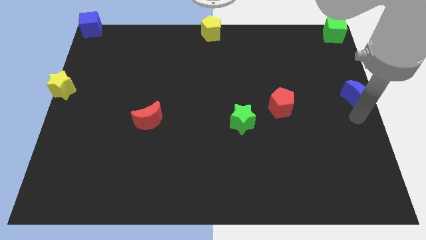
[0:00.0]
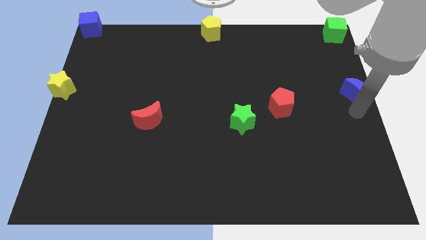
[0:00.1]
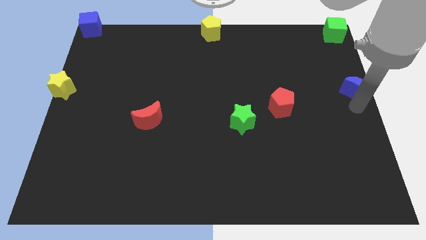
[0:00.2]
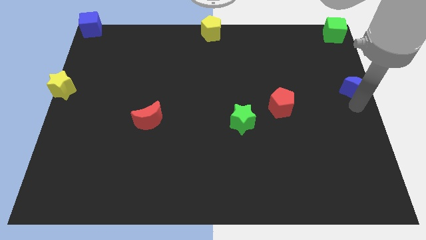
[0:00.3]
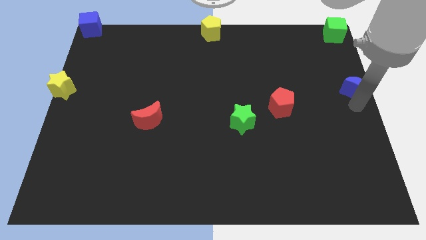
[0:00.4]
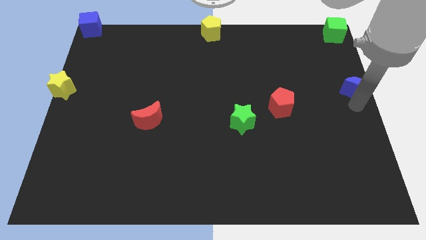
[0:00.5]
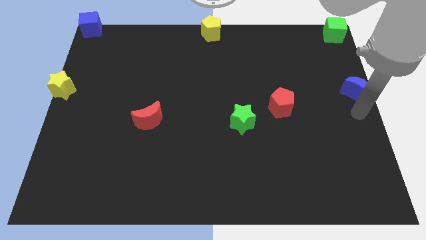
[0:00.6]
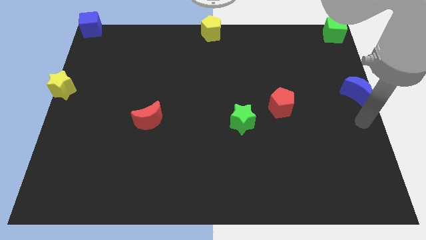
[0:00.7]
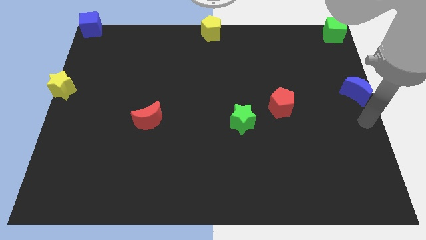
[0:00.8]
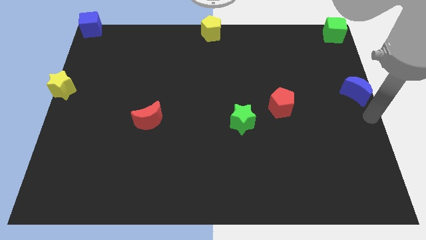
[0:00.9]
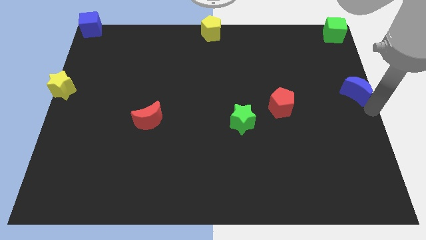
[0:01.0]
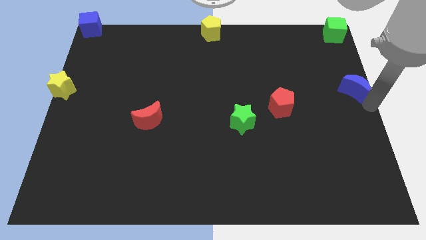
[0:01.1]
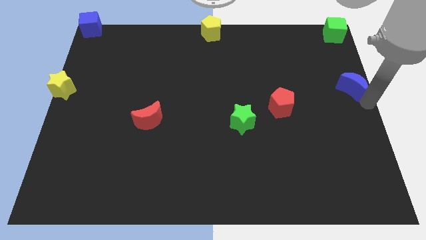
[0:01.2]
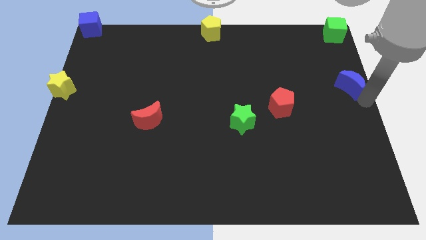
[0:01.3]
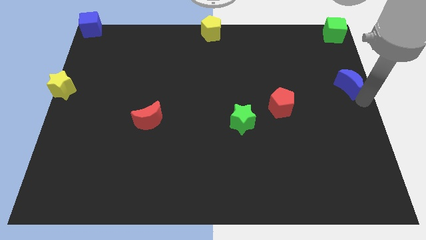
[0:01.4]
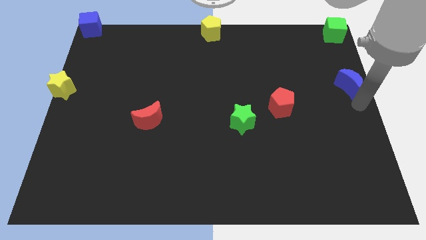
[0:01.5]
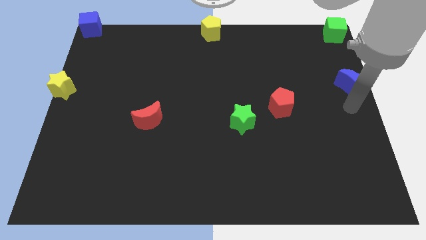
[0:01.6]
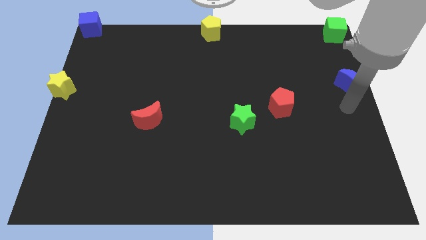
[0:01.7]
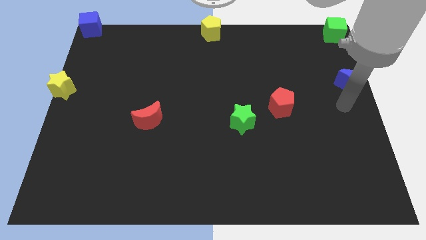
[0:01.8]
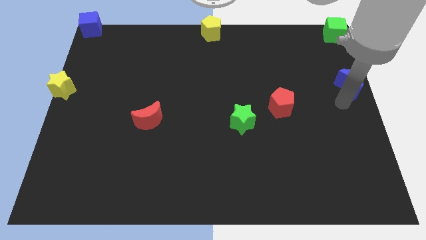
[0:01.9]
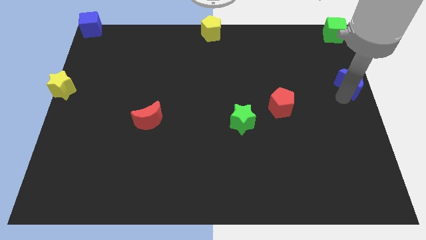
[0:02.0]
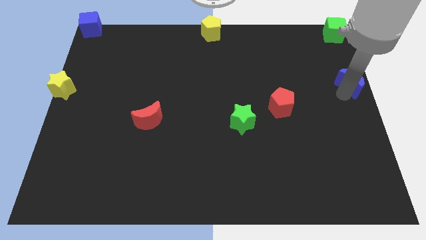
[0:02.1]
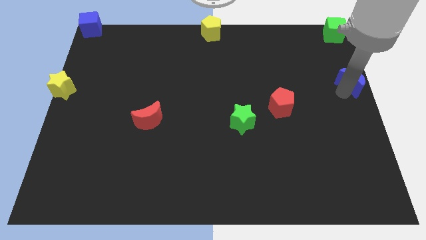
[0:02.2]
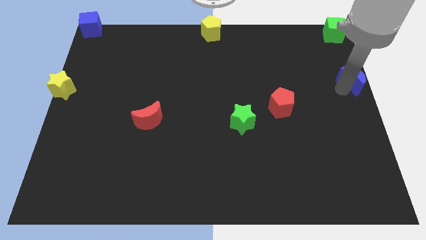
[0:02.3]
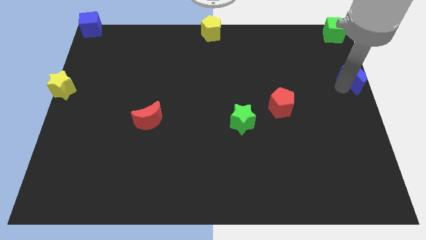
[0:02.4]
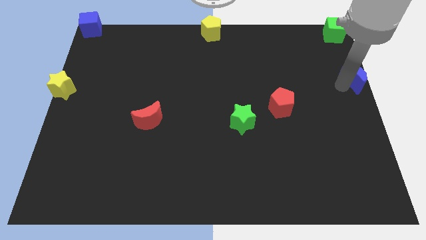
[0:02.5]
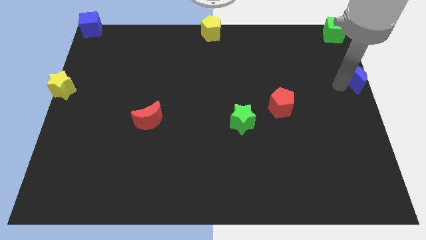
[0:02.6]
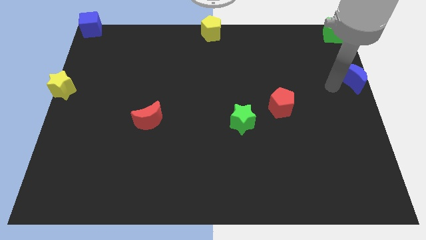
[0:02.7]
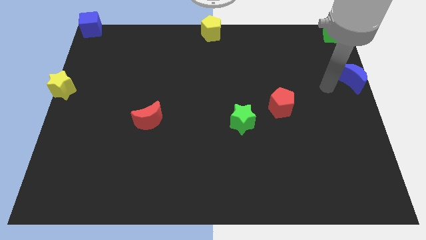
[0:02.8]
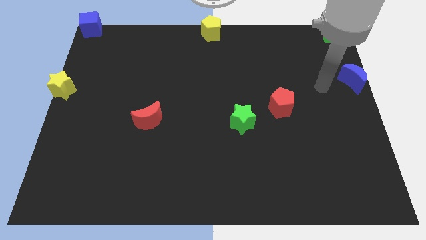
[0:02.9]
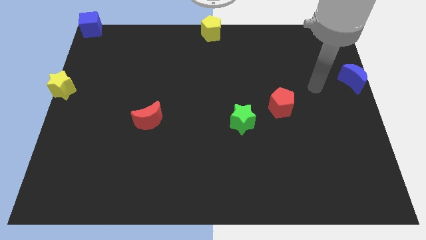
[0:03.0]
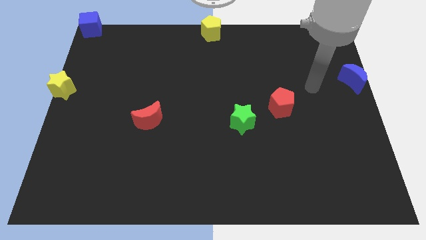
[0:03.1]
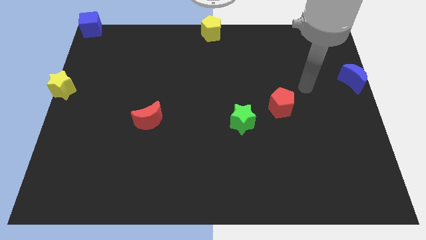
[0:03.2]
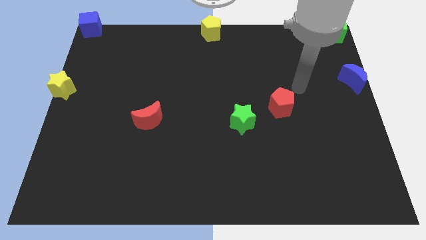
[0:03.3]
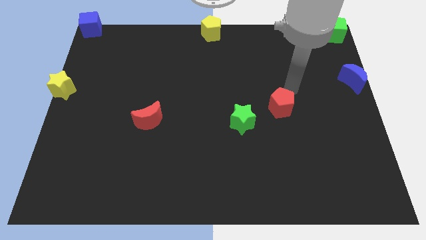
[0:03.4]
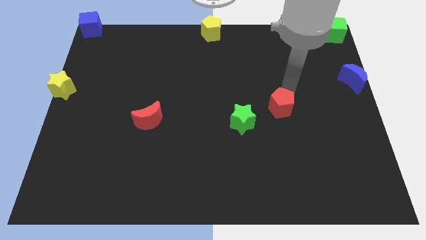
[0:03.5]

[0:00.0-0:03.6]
move the blue crescent vertically to the bottom side of the green cube

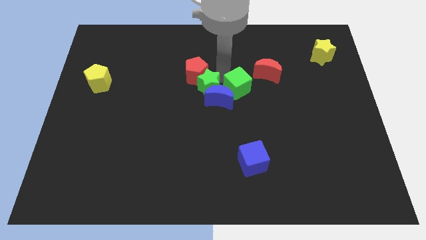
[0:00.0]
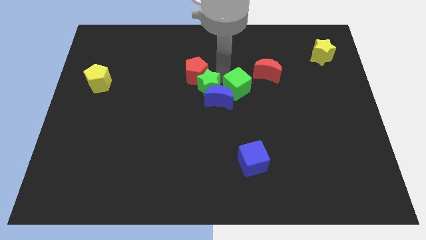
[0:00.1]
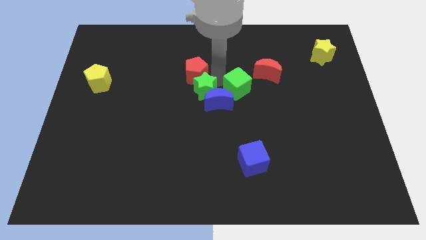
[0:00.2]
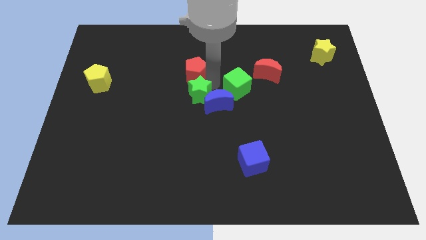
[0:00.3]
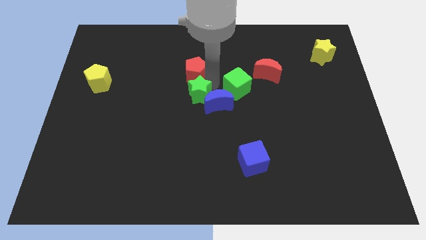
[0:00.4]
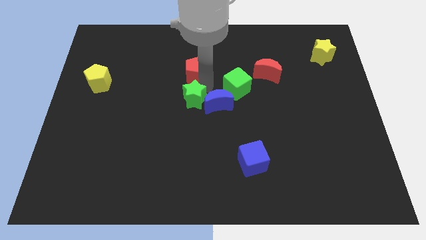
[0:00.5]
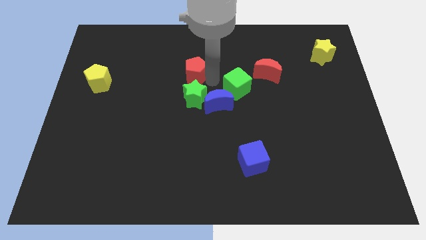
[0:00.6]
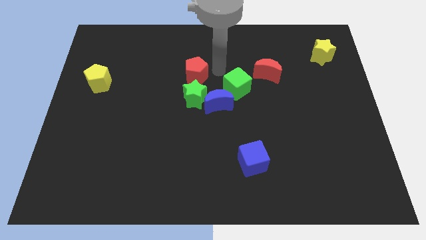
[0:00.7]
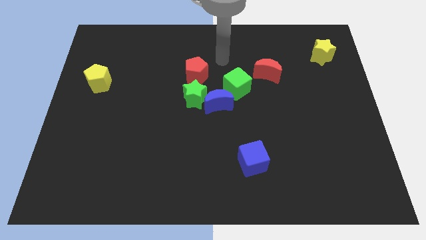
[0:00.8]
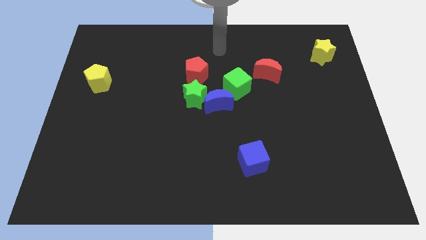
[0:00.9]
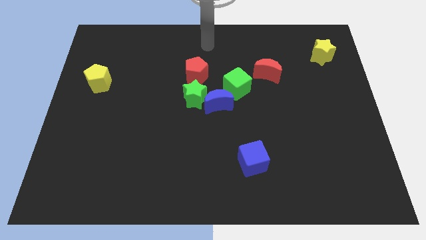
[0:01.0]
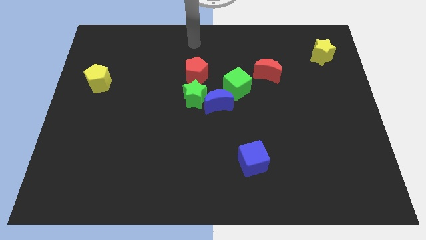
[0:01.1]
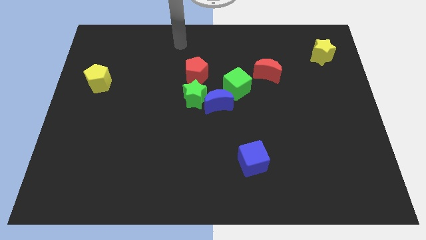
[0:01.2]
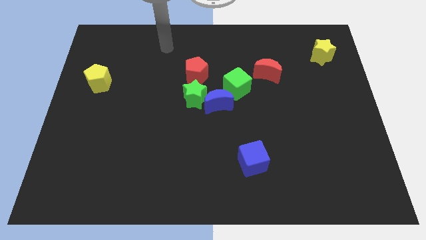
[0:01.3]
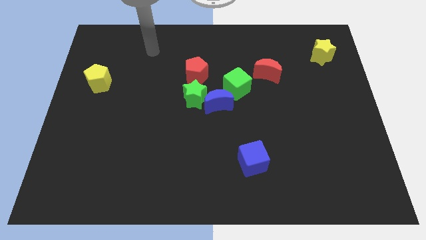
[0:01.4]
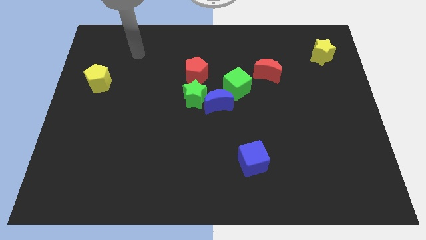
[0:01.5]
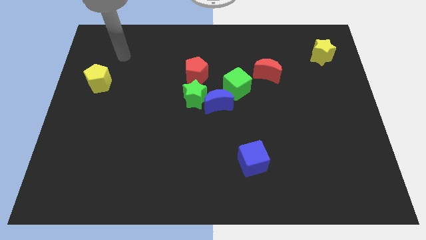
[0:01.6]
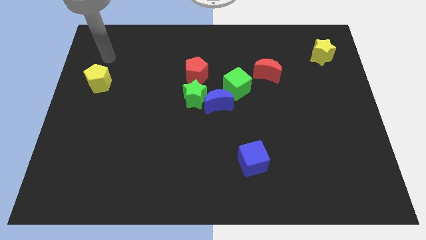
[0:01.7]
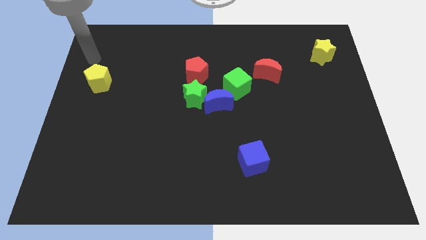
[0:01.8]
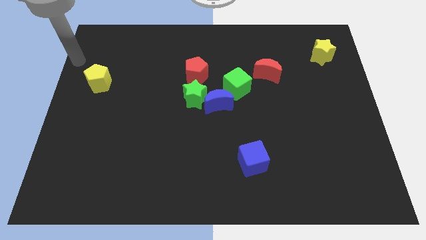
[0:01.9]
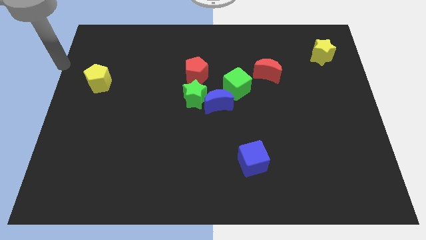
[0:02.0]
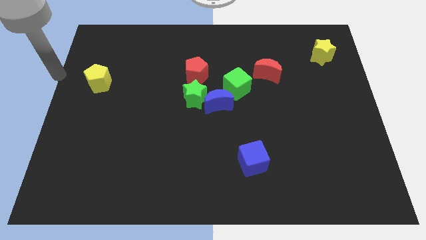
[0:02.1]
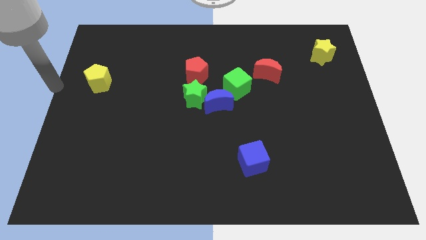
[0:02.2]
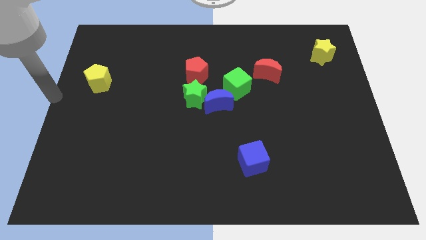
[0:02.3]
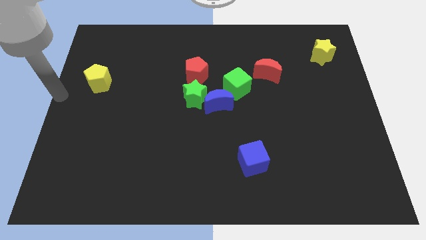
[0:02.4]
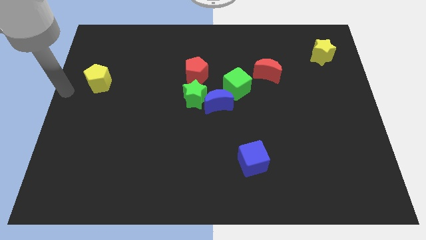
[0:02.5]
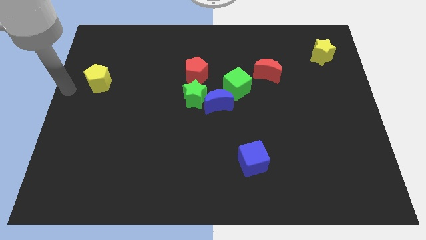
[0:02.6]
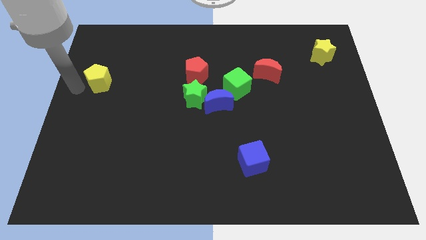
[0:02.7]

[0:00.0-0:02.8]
push both green star and blue crescent slightly towards down

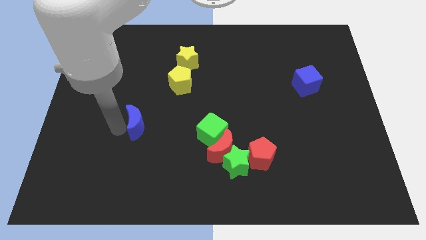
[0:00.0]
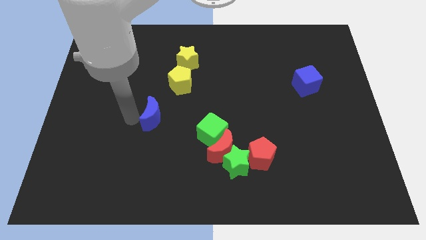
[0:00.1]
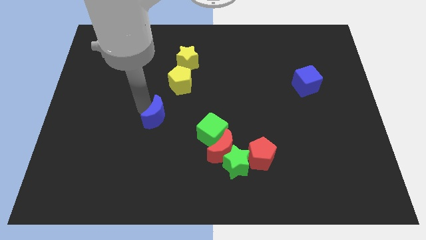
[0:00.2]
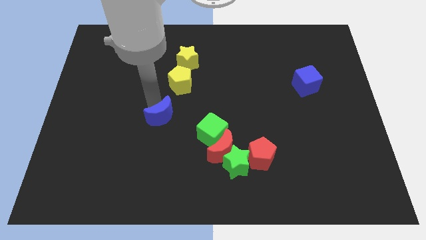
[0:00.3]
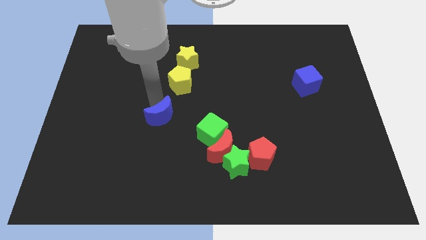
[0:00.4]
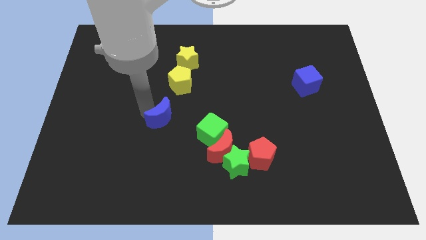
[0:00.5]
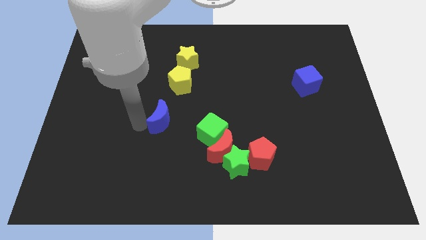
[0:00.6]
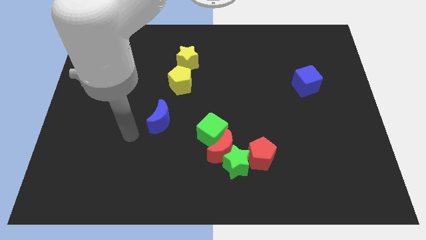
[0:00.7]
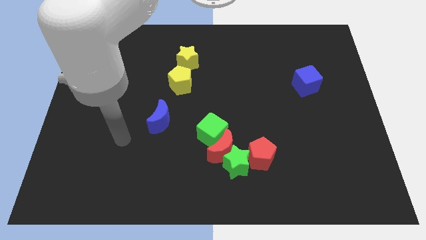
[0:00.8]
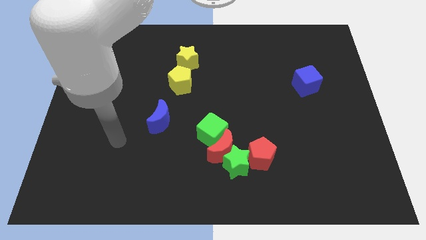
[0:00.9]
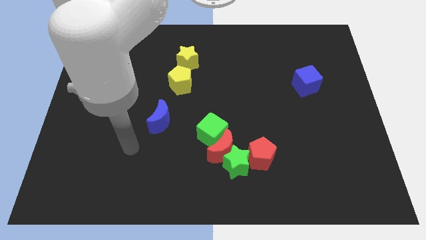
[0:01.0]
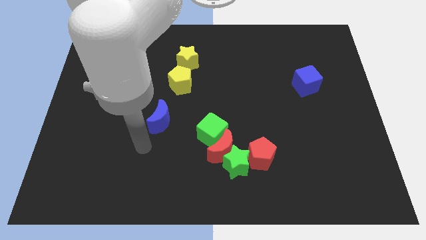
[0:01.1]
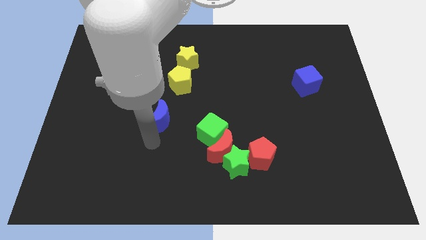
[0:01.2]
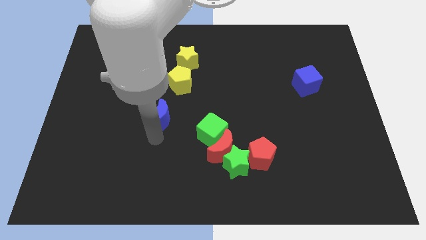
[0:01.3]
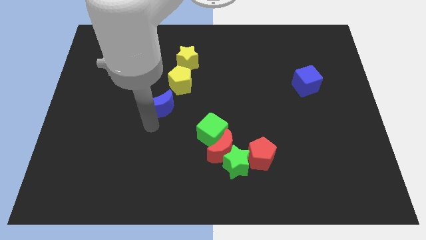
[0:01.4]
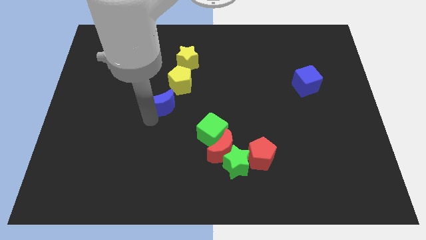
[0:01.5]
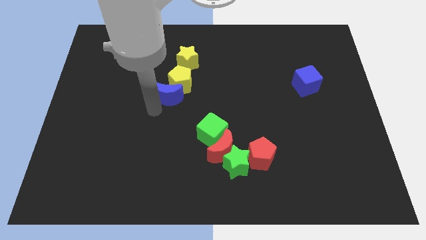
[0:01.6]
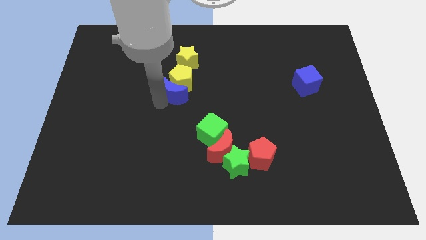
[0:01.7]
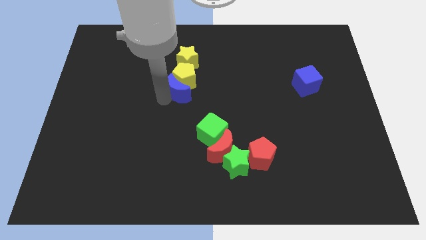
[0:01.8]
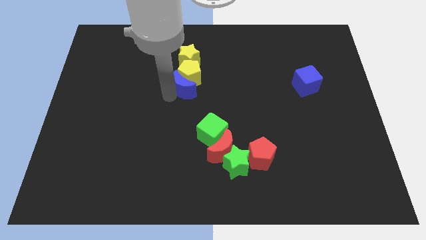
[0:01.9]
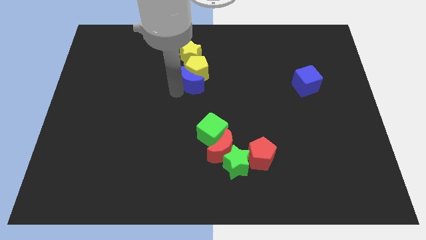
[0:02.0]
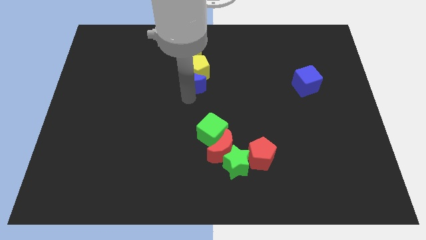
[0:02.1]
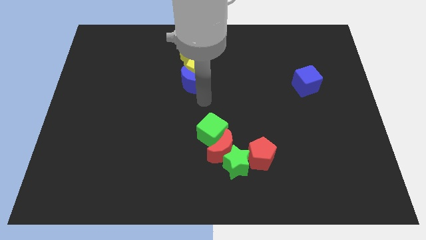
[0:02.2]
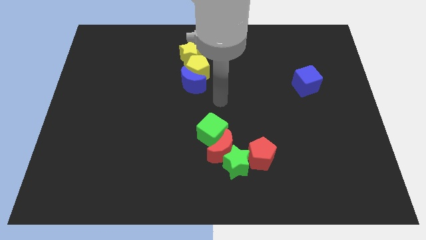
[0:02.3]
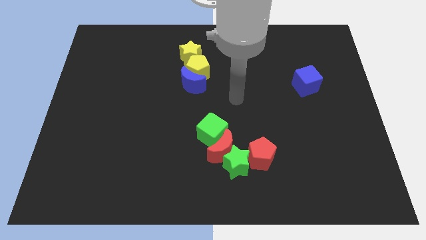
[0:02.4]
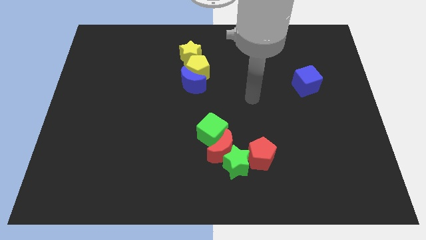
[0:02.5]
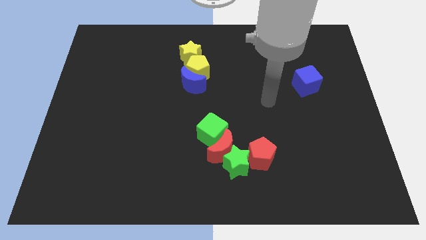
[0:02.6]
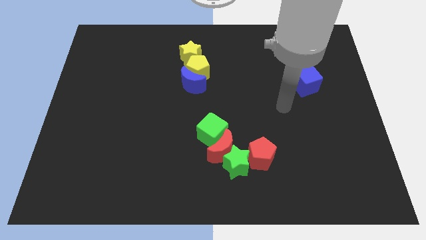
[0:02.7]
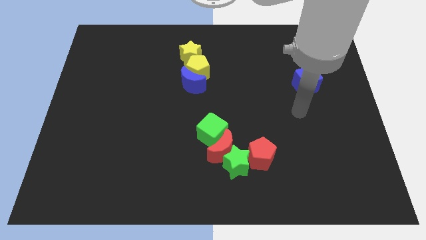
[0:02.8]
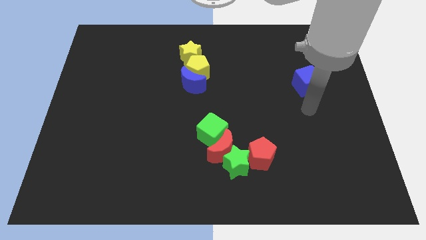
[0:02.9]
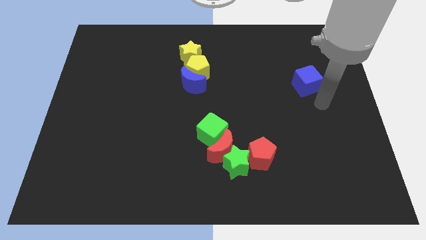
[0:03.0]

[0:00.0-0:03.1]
push the blue moon and yellow pentagon into the yellow star
